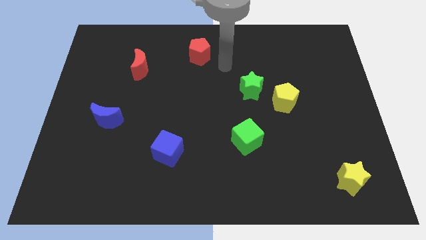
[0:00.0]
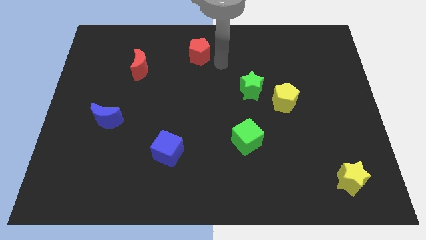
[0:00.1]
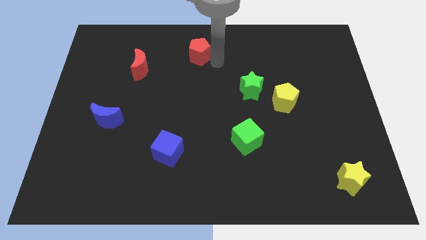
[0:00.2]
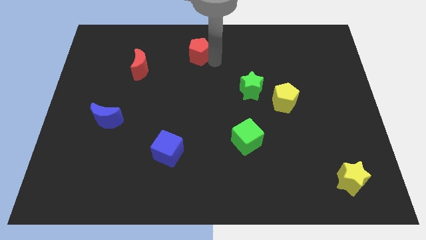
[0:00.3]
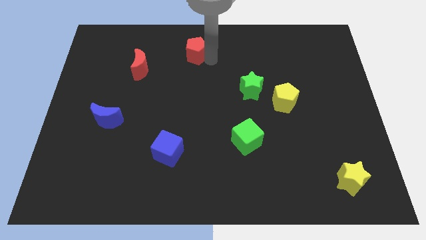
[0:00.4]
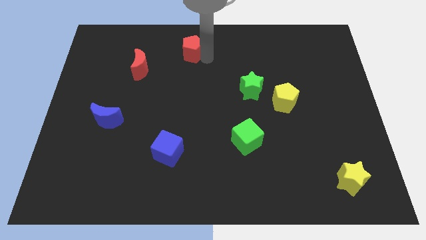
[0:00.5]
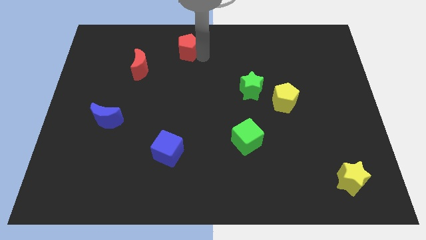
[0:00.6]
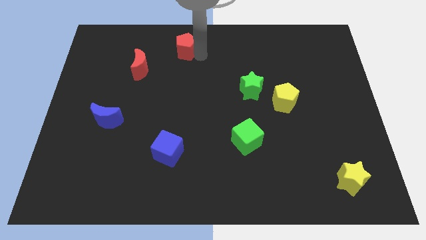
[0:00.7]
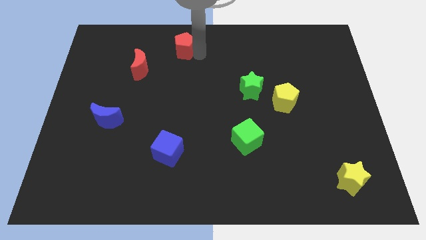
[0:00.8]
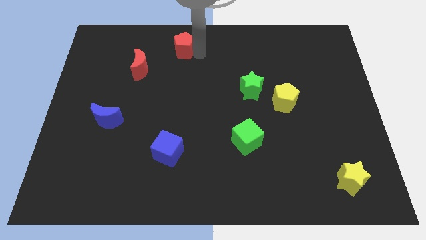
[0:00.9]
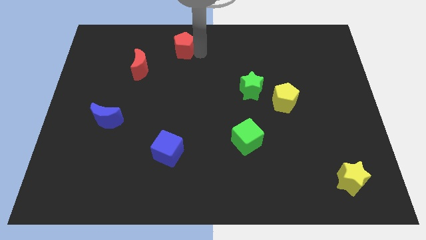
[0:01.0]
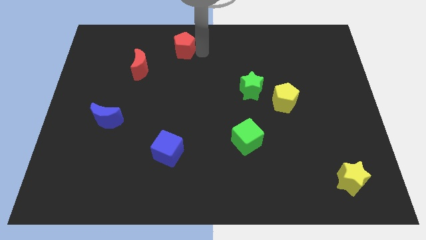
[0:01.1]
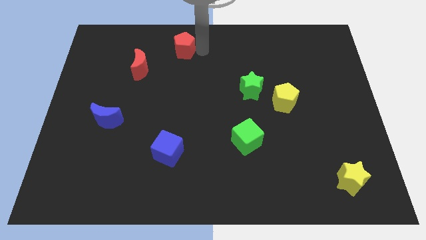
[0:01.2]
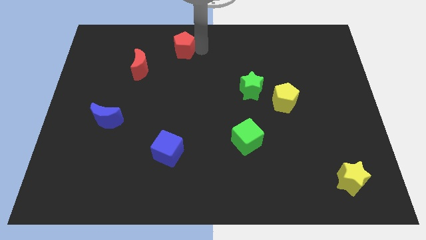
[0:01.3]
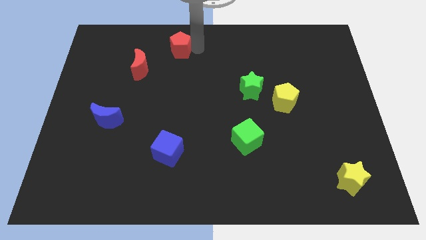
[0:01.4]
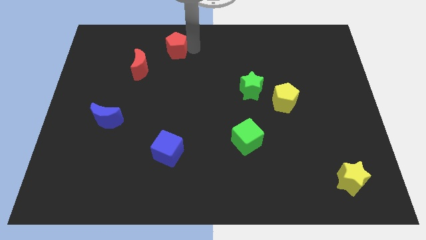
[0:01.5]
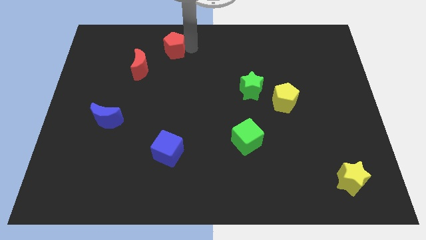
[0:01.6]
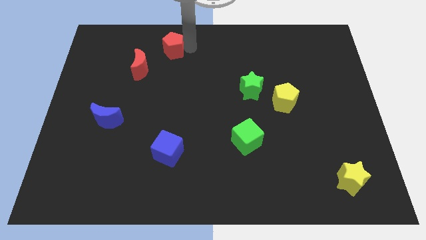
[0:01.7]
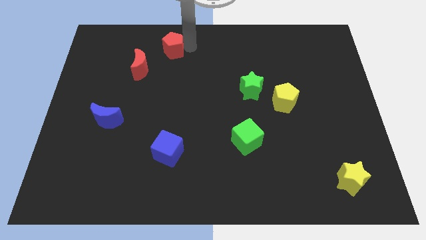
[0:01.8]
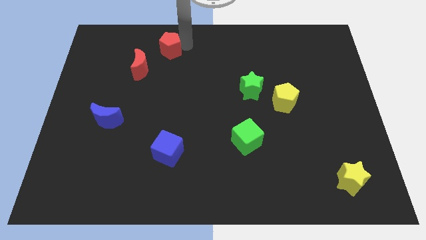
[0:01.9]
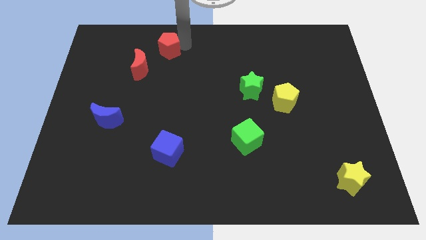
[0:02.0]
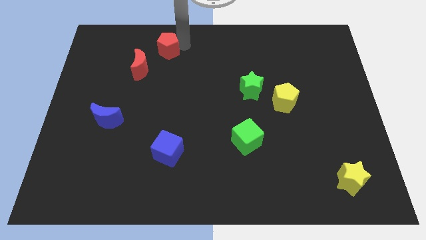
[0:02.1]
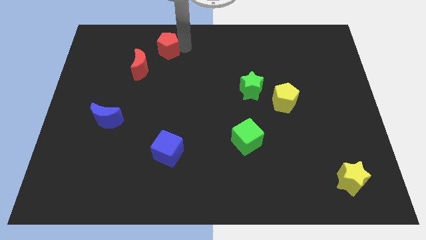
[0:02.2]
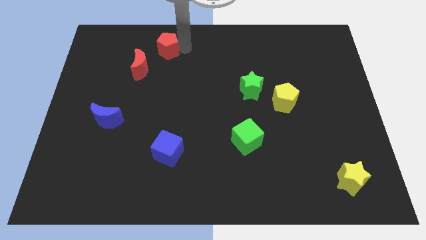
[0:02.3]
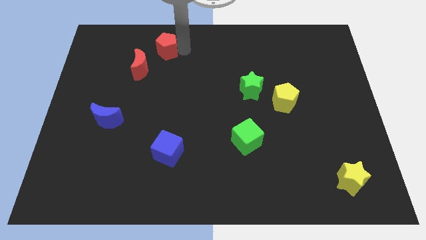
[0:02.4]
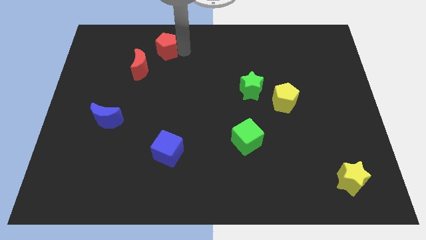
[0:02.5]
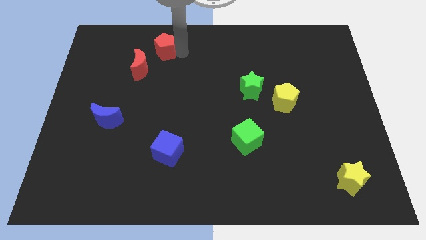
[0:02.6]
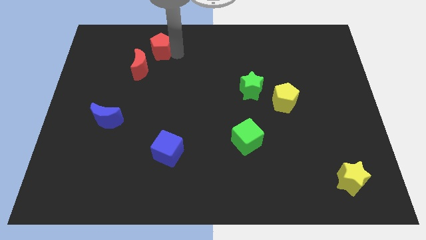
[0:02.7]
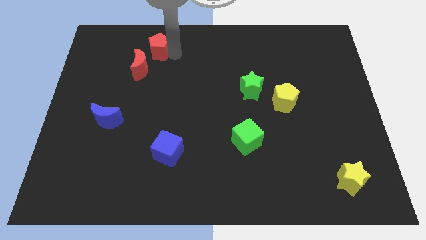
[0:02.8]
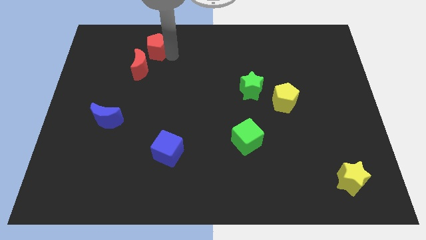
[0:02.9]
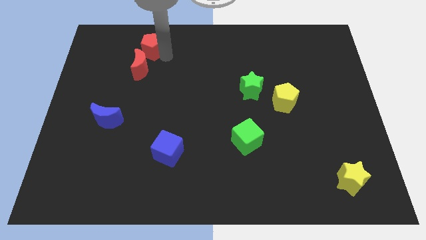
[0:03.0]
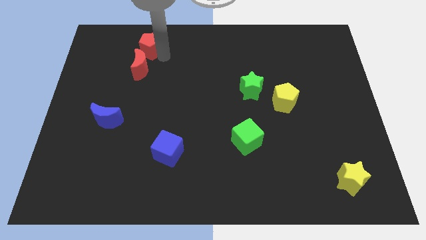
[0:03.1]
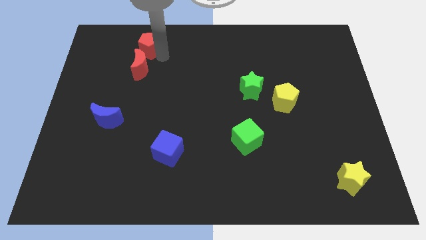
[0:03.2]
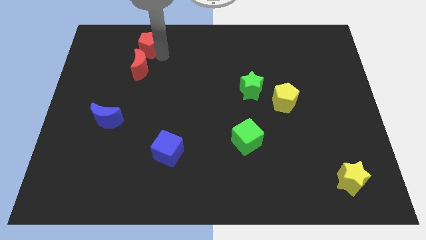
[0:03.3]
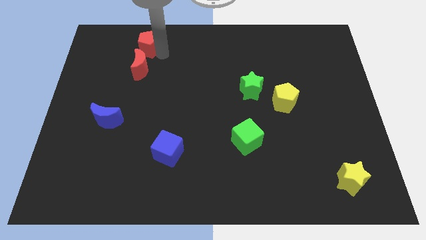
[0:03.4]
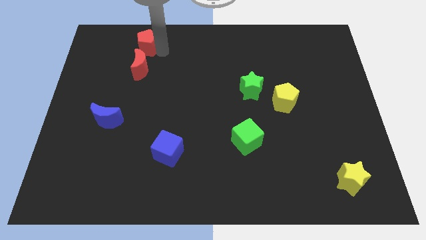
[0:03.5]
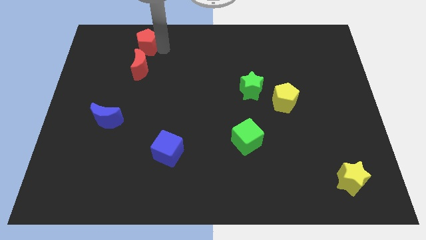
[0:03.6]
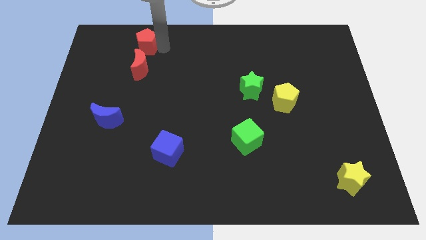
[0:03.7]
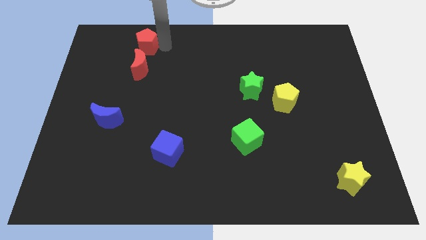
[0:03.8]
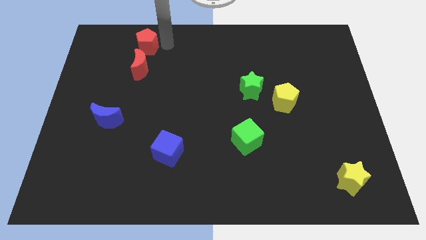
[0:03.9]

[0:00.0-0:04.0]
place the red pentagon above the red moon

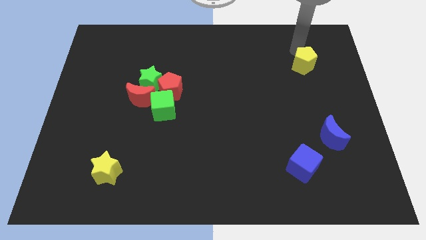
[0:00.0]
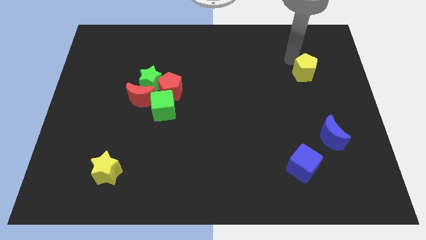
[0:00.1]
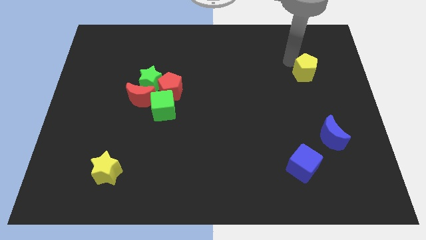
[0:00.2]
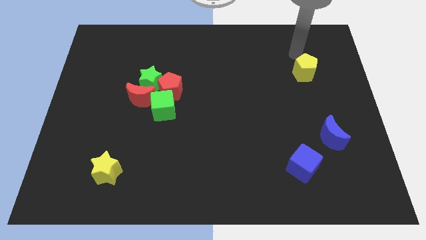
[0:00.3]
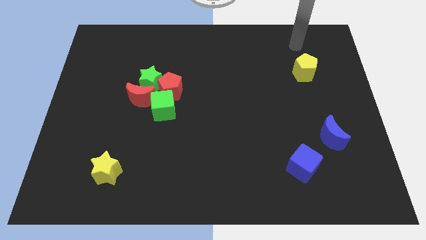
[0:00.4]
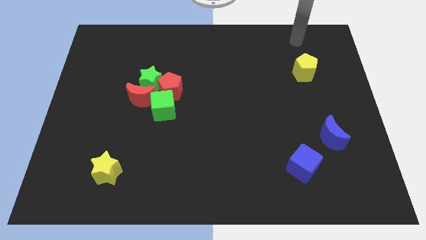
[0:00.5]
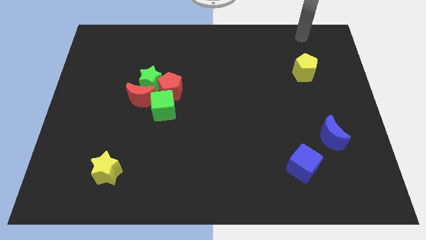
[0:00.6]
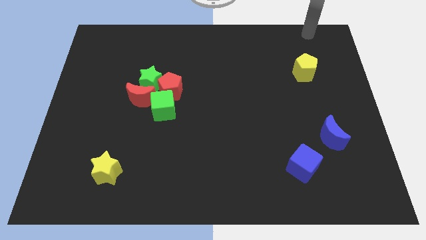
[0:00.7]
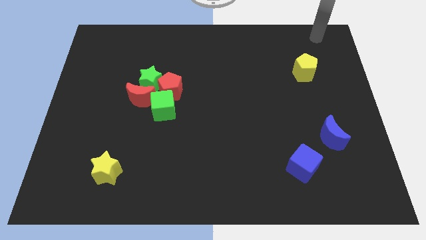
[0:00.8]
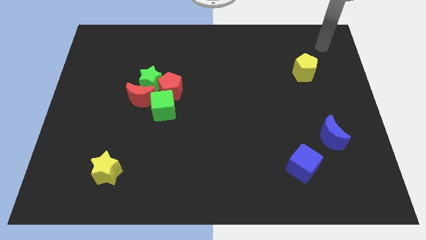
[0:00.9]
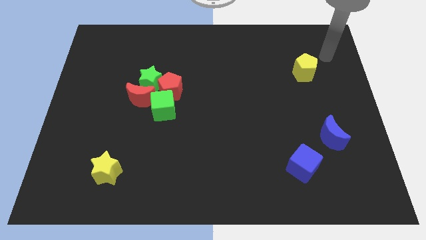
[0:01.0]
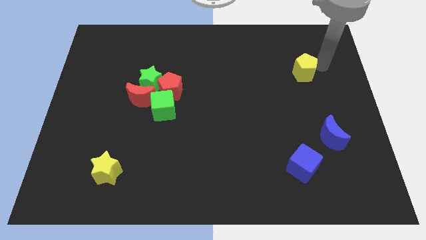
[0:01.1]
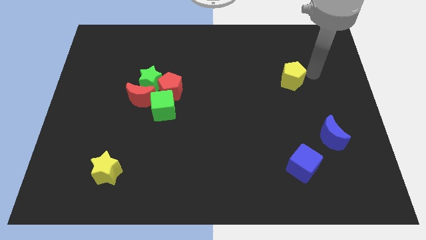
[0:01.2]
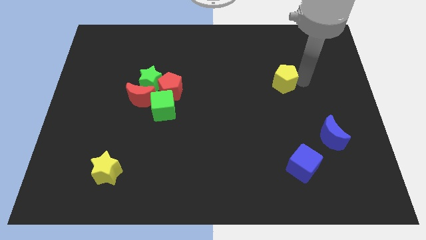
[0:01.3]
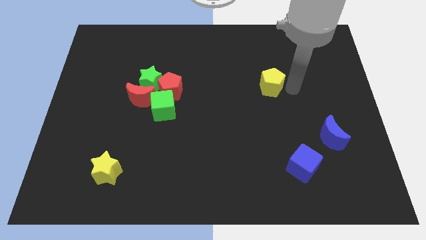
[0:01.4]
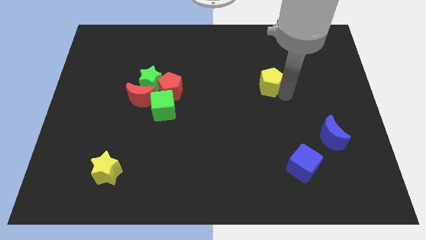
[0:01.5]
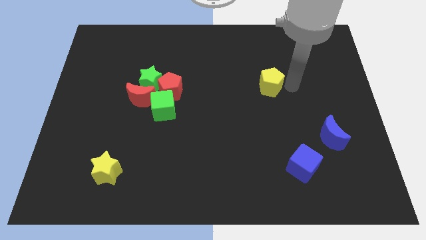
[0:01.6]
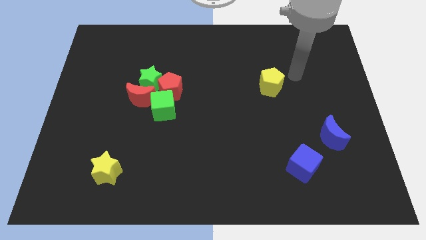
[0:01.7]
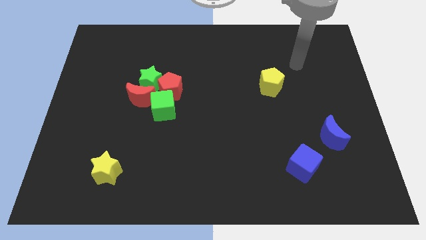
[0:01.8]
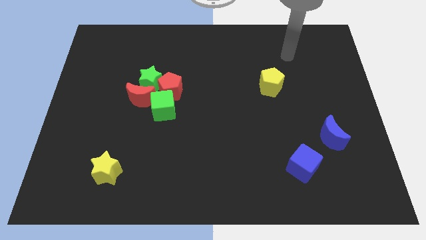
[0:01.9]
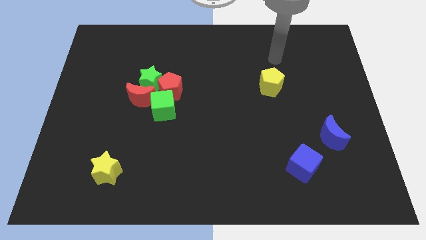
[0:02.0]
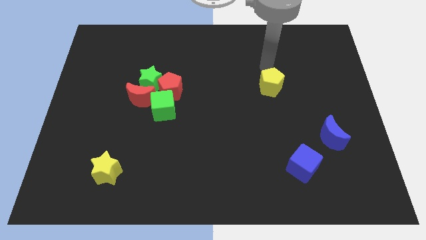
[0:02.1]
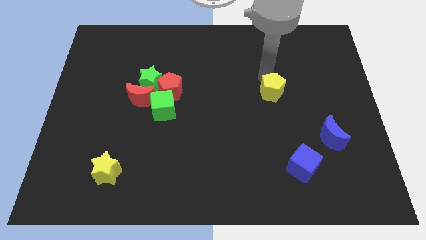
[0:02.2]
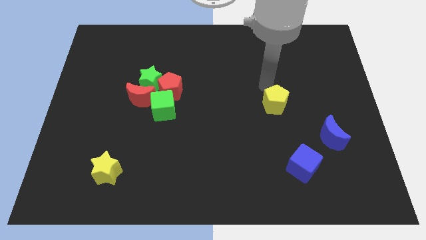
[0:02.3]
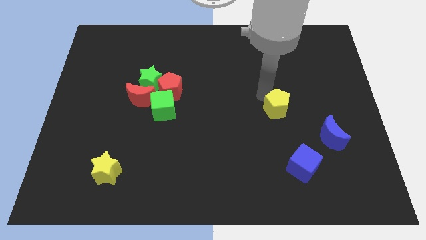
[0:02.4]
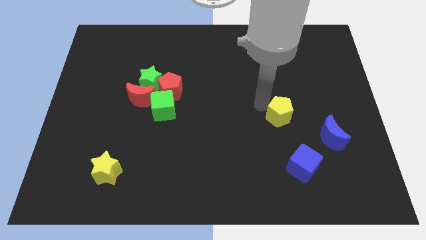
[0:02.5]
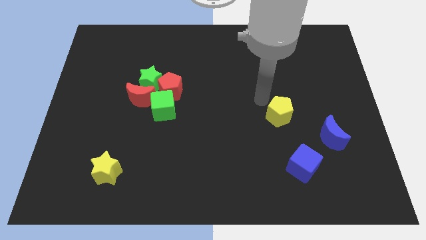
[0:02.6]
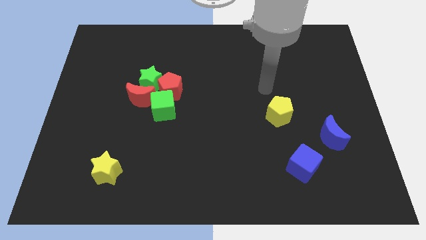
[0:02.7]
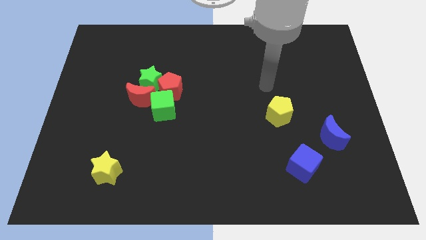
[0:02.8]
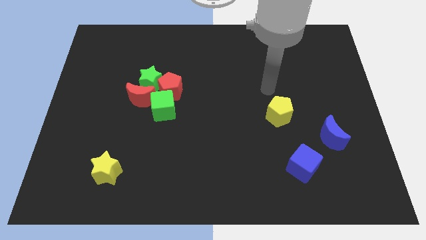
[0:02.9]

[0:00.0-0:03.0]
place the yellow pentagon right to the green cube

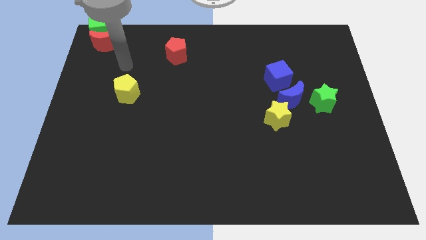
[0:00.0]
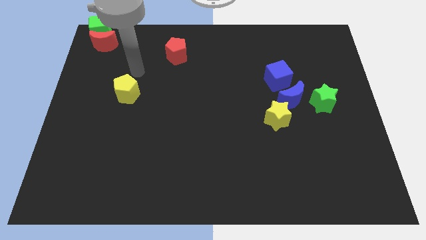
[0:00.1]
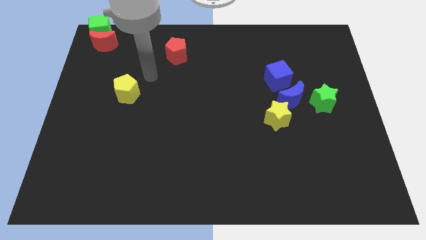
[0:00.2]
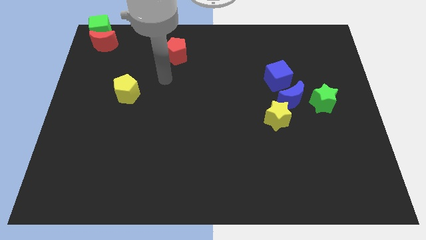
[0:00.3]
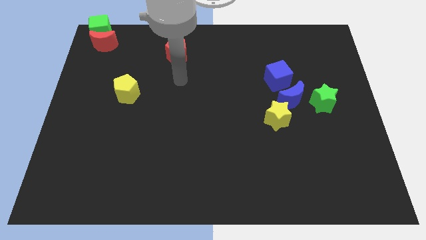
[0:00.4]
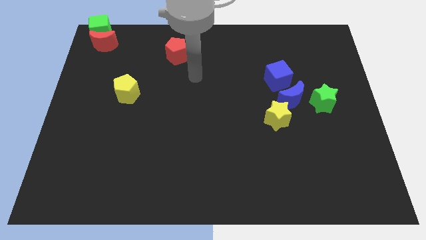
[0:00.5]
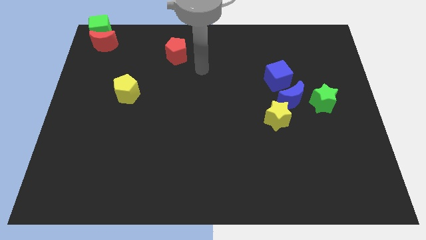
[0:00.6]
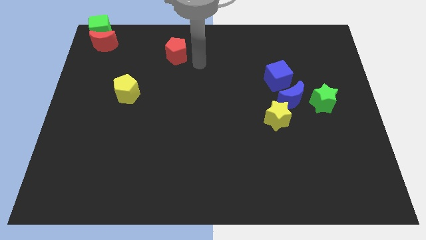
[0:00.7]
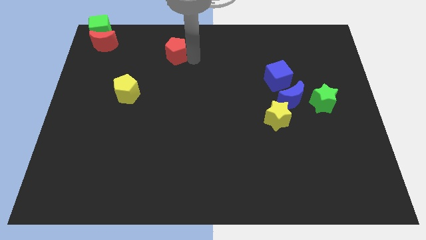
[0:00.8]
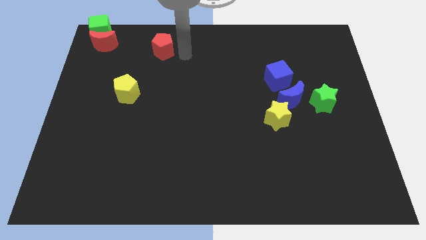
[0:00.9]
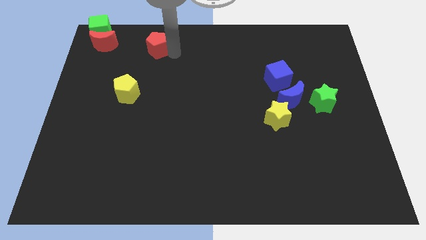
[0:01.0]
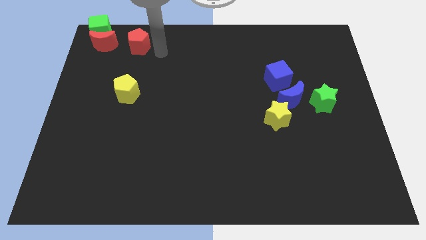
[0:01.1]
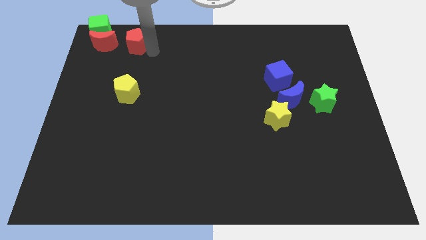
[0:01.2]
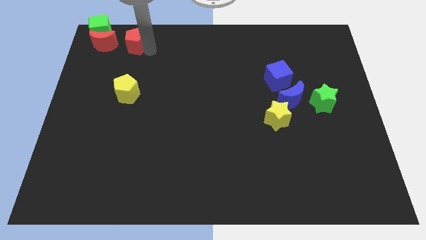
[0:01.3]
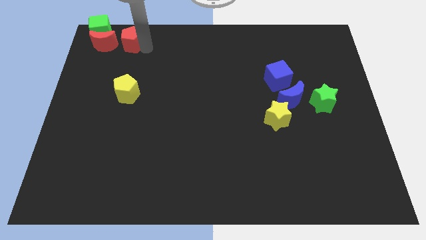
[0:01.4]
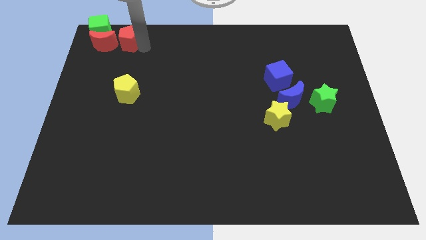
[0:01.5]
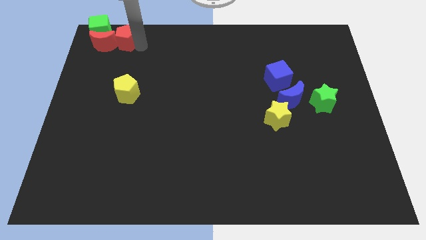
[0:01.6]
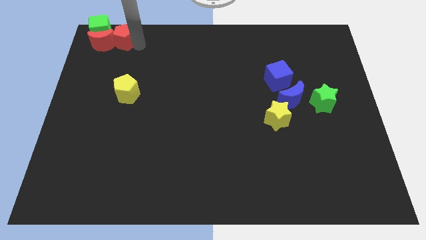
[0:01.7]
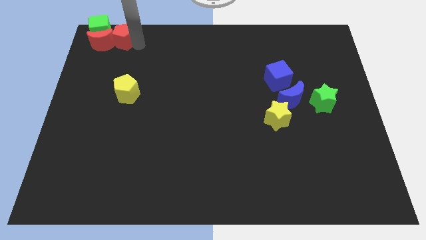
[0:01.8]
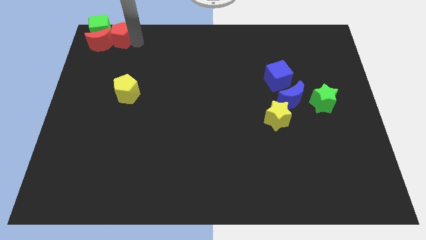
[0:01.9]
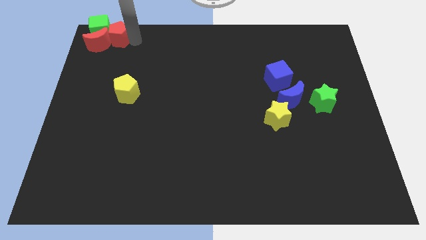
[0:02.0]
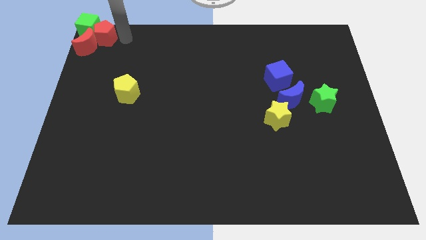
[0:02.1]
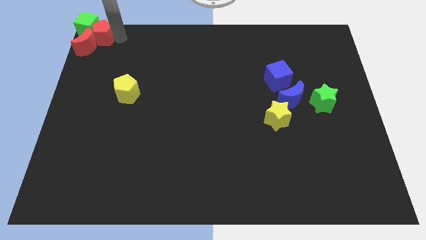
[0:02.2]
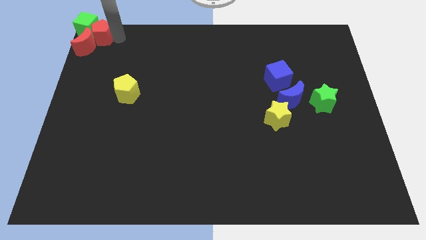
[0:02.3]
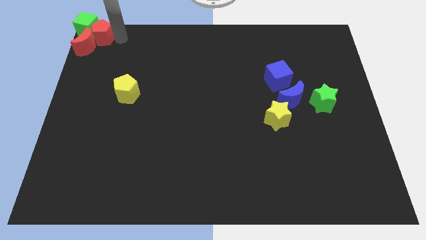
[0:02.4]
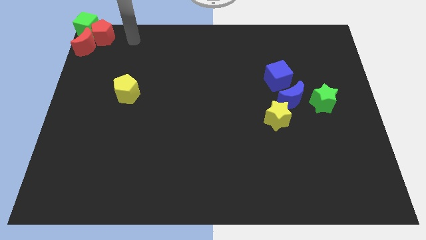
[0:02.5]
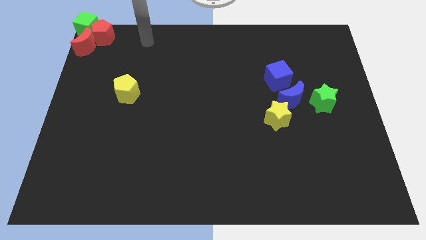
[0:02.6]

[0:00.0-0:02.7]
push the red pentagon into the right side of the green cube
